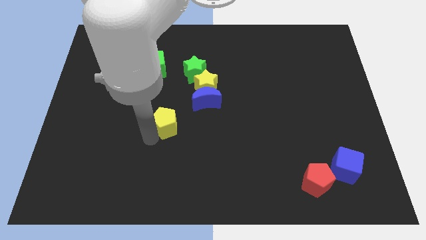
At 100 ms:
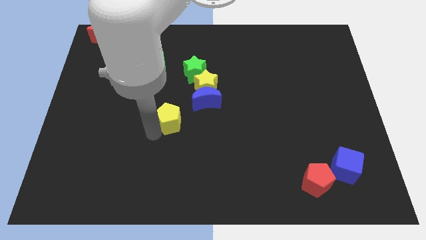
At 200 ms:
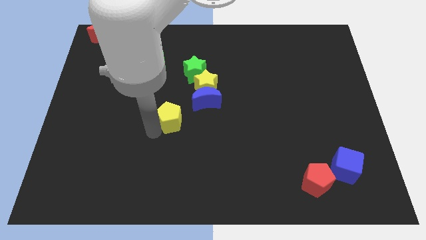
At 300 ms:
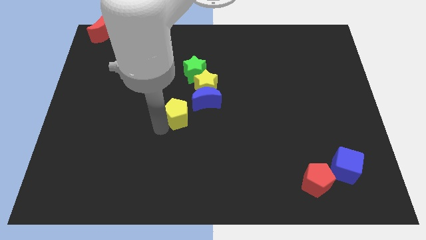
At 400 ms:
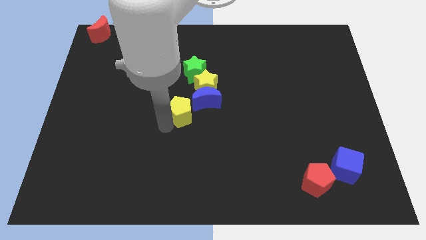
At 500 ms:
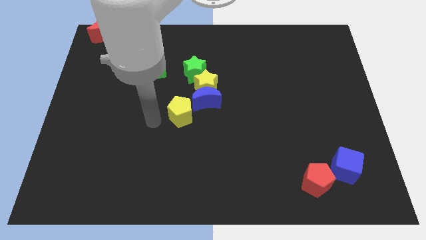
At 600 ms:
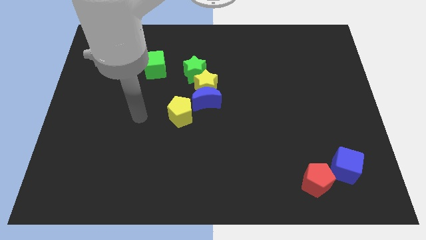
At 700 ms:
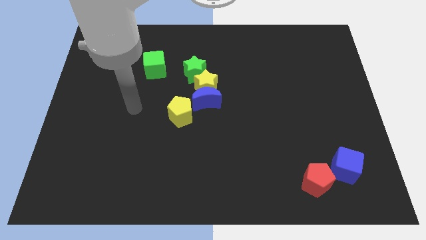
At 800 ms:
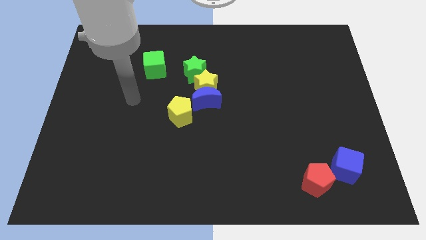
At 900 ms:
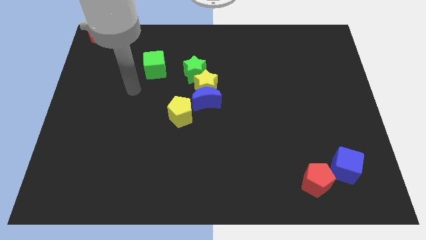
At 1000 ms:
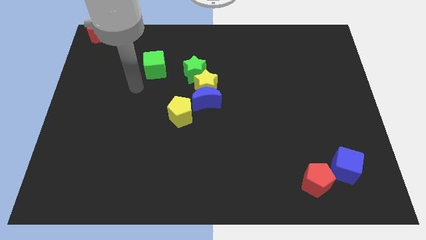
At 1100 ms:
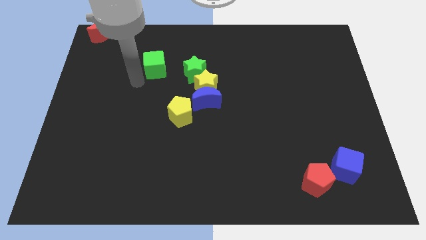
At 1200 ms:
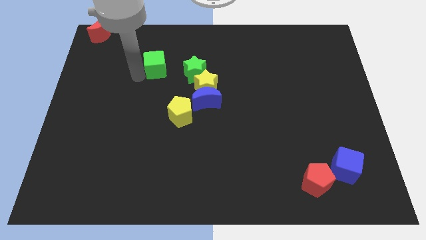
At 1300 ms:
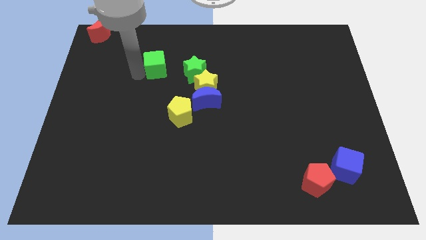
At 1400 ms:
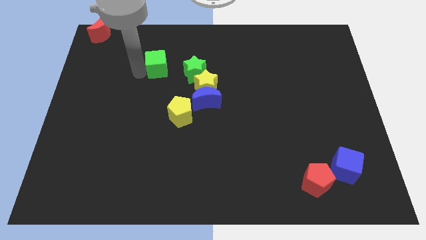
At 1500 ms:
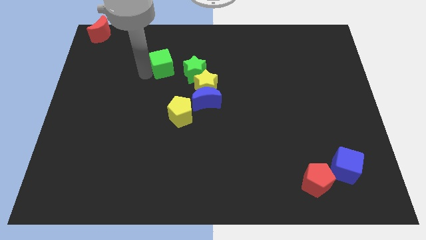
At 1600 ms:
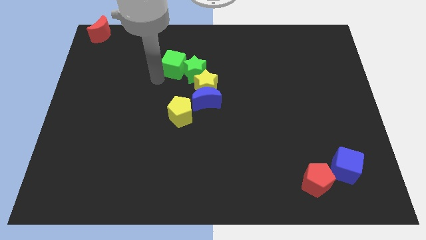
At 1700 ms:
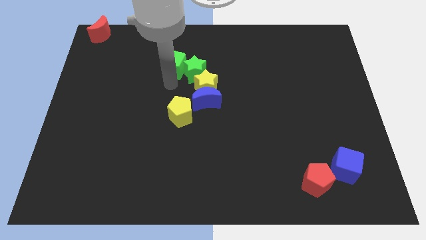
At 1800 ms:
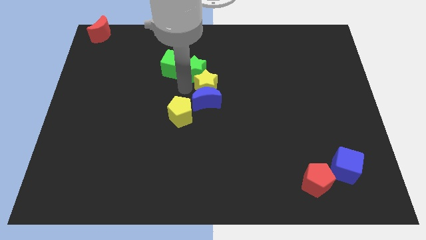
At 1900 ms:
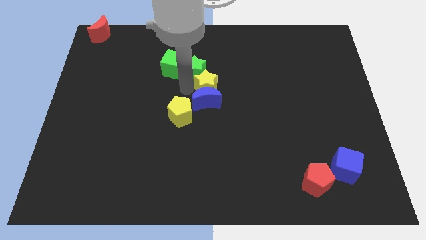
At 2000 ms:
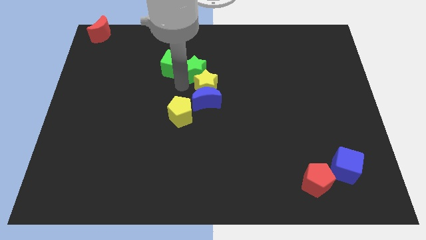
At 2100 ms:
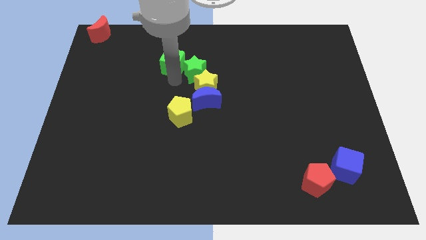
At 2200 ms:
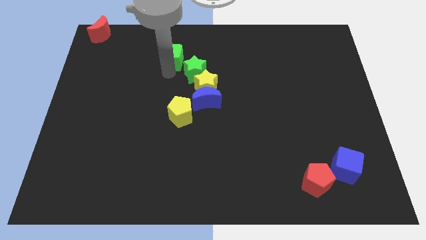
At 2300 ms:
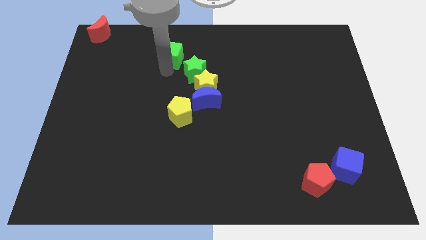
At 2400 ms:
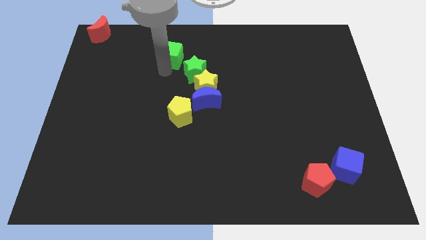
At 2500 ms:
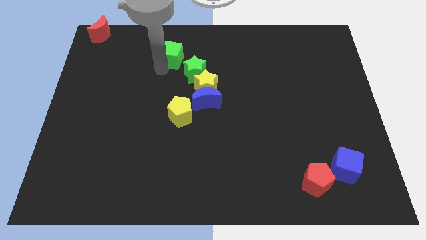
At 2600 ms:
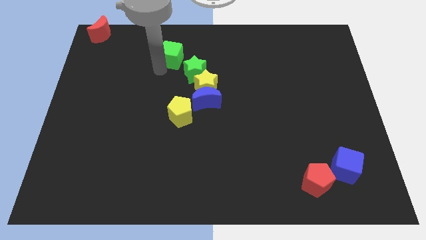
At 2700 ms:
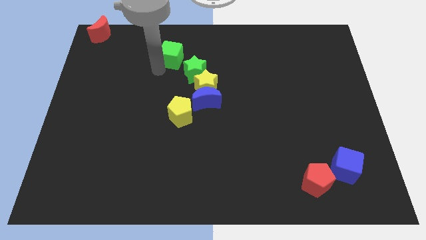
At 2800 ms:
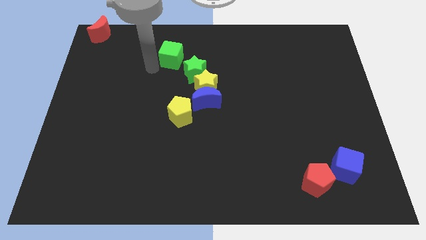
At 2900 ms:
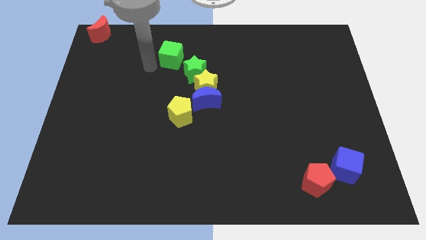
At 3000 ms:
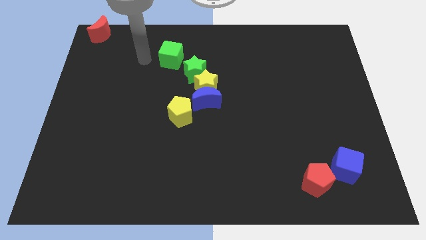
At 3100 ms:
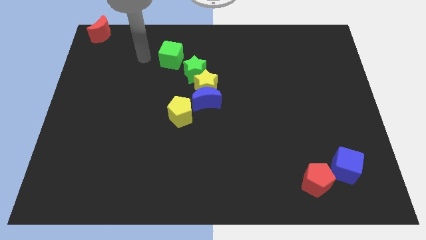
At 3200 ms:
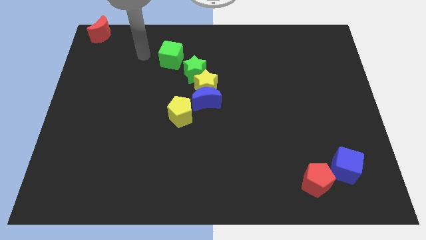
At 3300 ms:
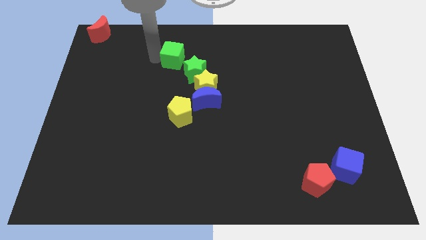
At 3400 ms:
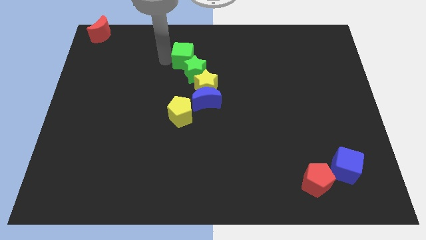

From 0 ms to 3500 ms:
move the green cube above the green star

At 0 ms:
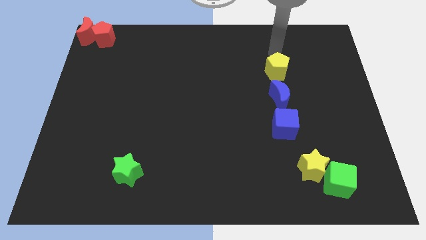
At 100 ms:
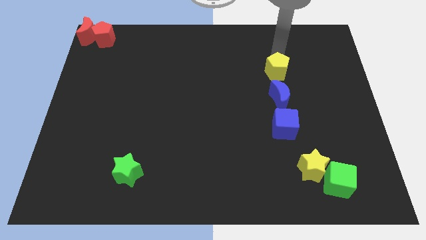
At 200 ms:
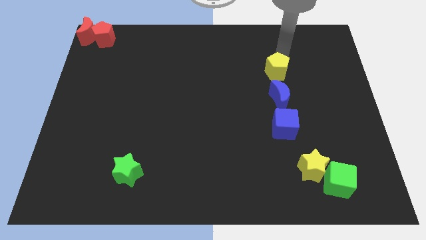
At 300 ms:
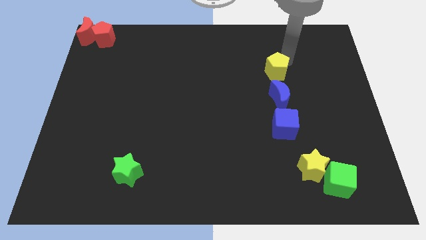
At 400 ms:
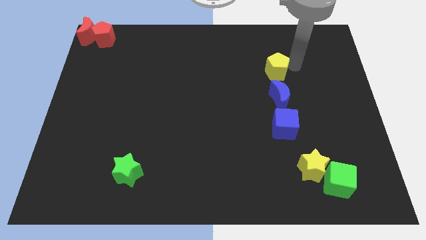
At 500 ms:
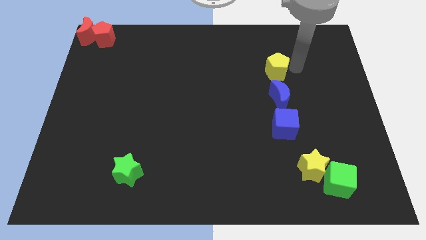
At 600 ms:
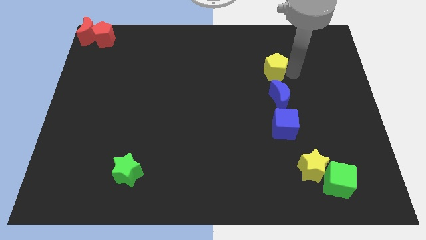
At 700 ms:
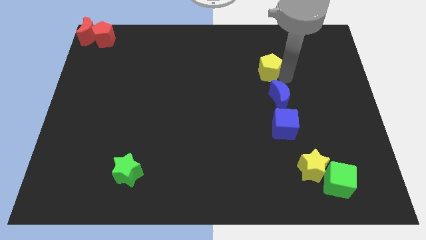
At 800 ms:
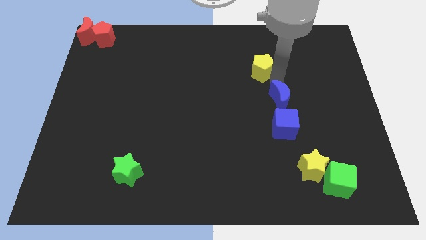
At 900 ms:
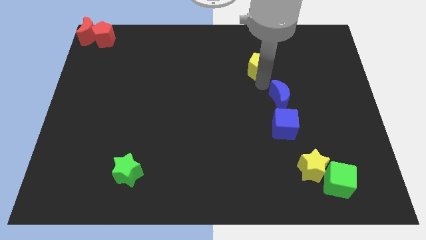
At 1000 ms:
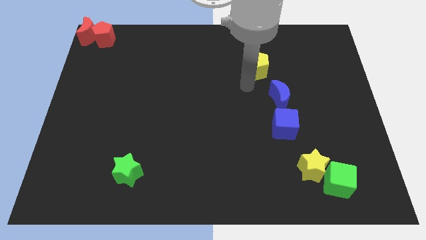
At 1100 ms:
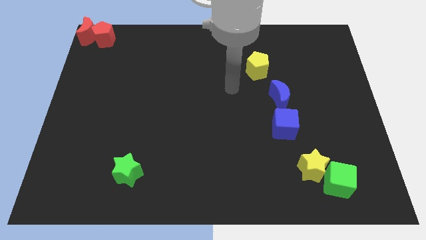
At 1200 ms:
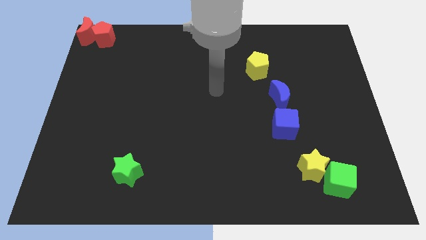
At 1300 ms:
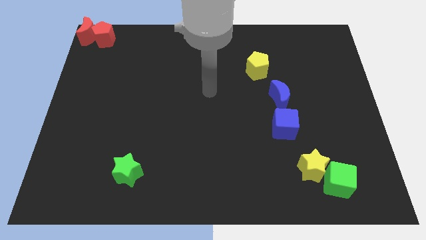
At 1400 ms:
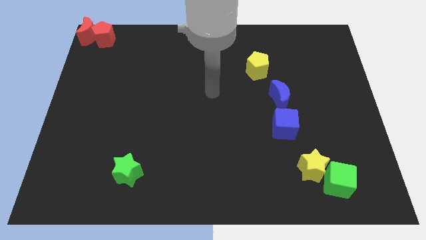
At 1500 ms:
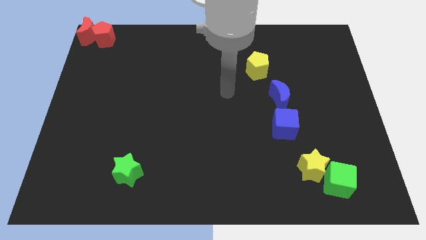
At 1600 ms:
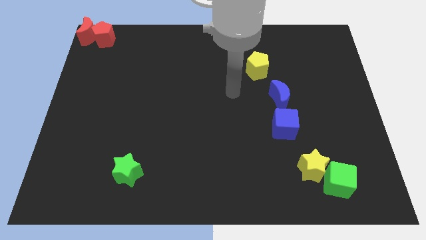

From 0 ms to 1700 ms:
push the yellow pentagon slightly to the left

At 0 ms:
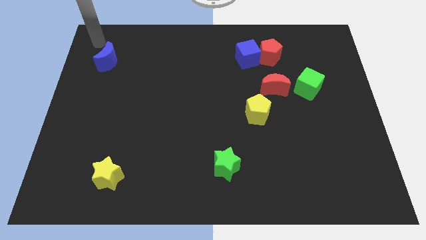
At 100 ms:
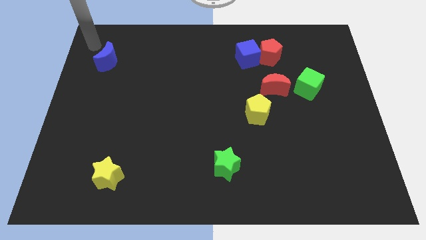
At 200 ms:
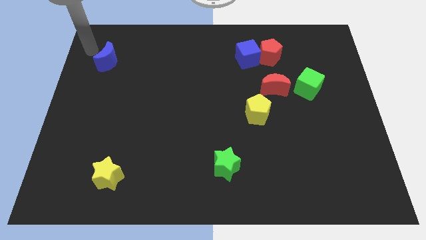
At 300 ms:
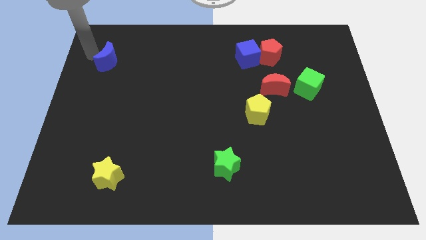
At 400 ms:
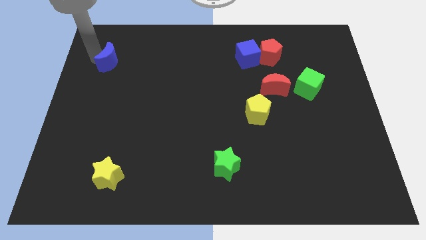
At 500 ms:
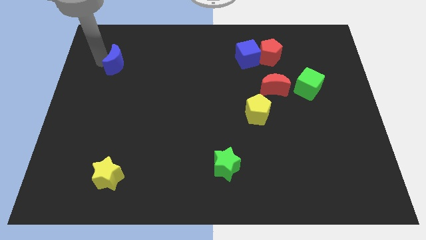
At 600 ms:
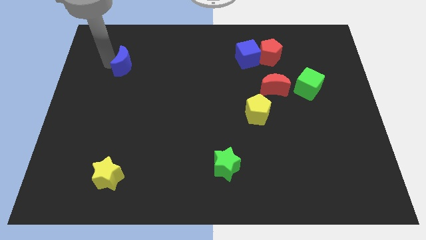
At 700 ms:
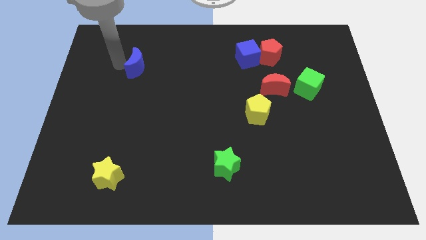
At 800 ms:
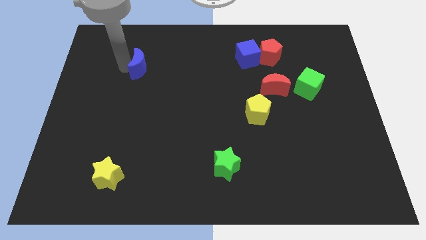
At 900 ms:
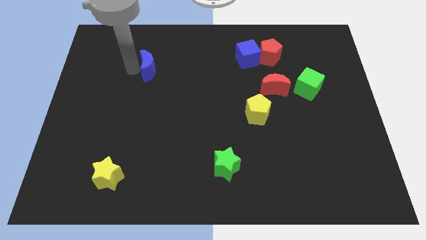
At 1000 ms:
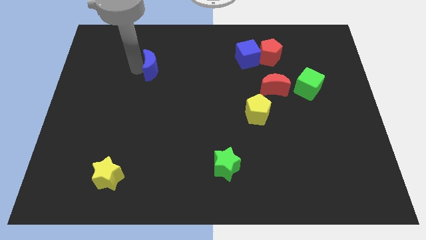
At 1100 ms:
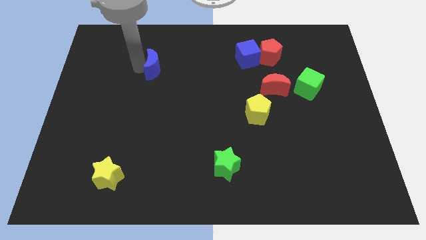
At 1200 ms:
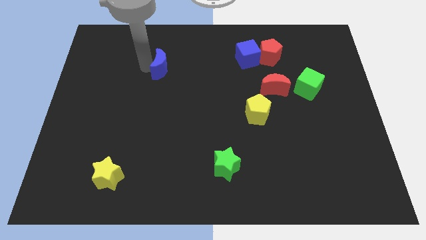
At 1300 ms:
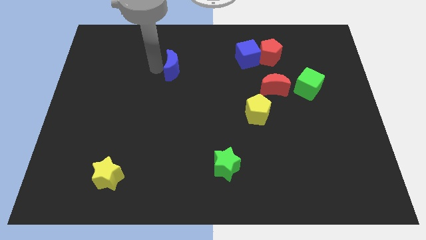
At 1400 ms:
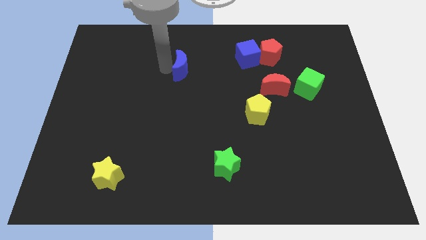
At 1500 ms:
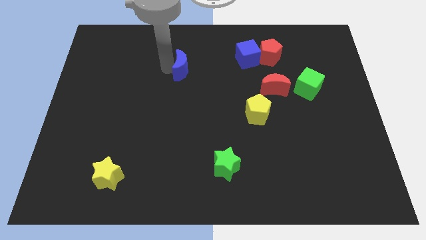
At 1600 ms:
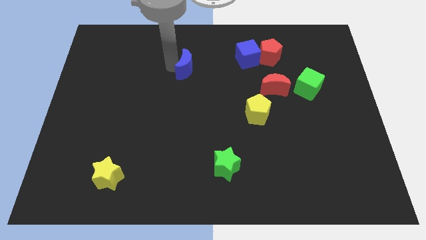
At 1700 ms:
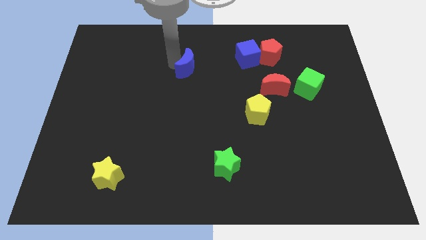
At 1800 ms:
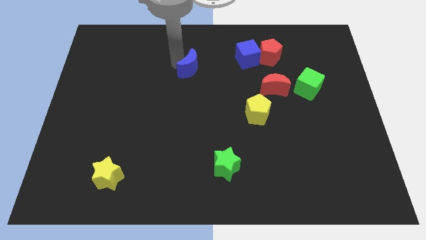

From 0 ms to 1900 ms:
move the blue crescent right to the board

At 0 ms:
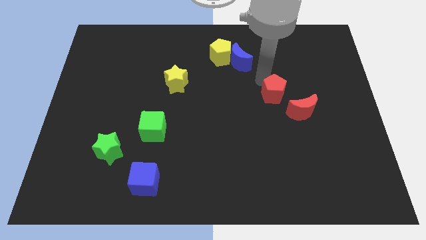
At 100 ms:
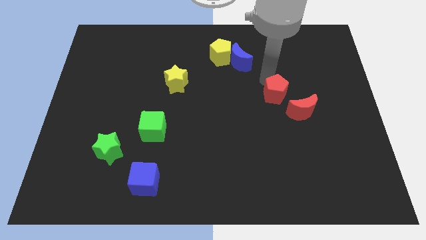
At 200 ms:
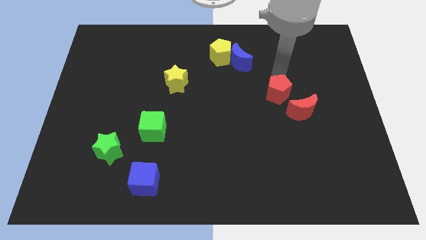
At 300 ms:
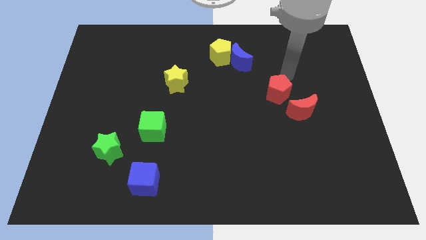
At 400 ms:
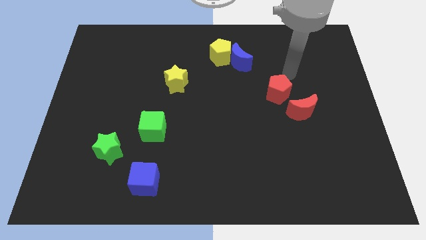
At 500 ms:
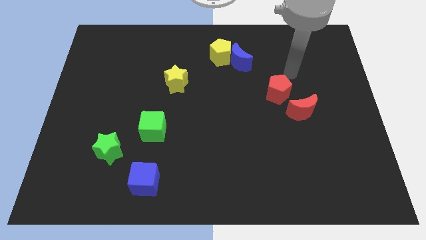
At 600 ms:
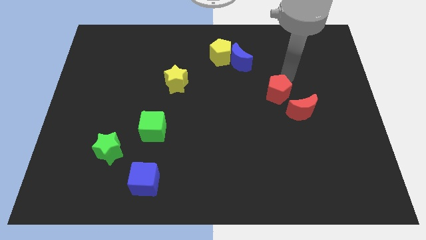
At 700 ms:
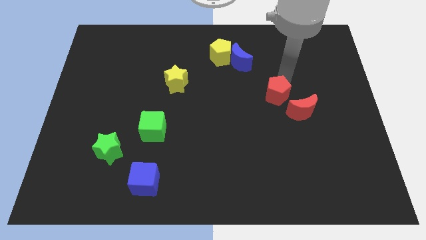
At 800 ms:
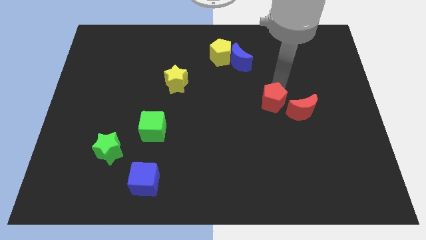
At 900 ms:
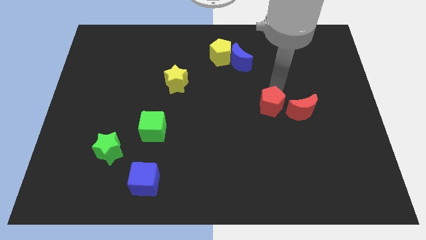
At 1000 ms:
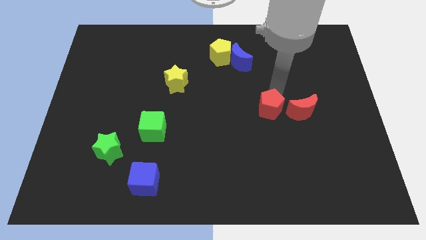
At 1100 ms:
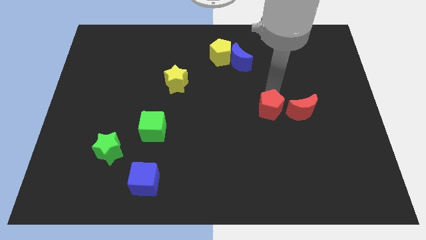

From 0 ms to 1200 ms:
move red pentagon to the left of red crescent

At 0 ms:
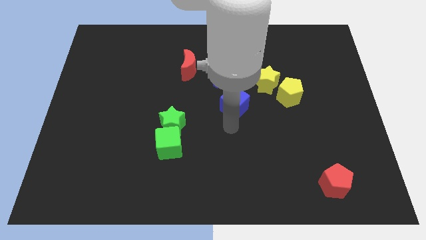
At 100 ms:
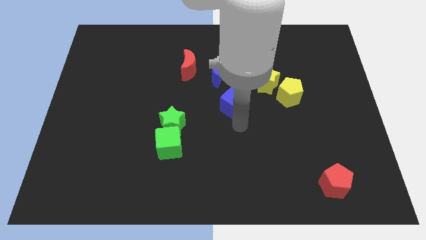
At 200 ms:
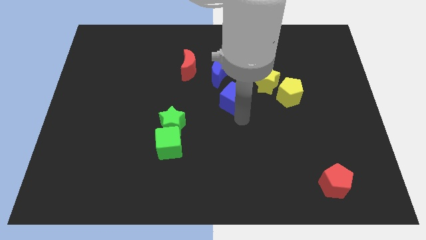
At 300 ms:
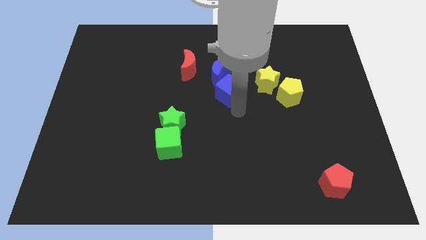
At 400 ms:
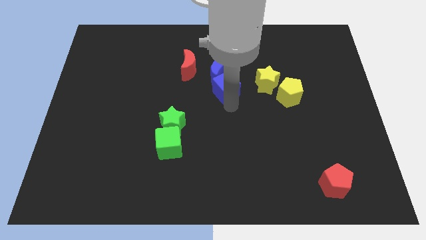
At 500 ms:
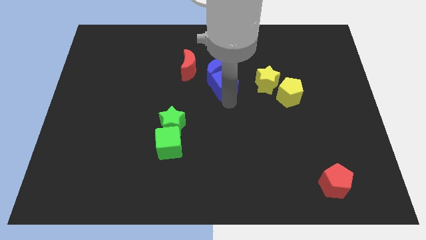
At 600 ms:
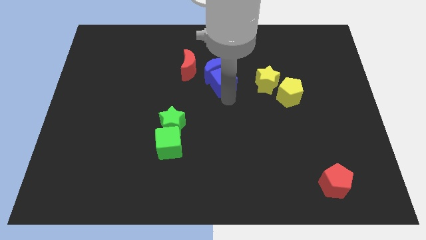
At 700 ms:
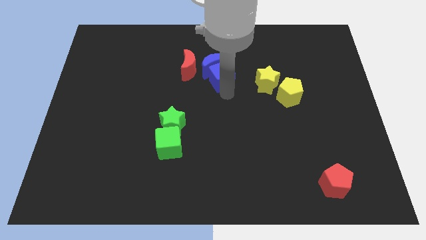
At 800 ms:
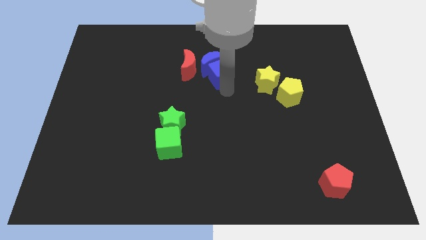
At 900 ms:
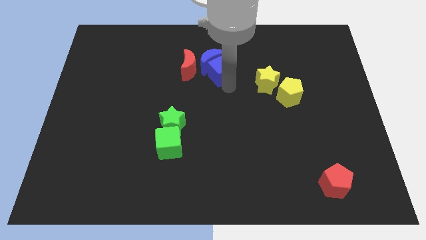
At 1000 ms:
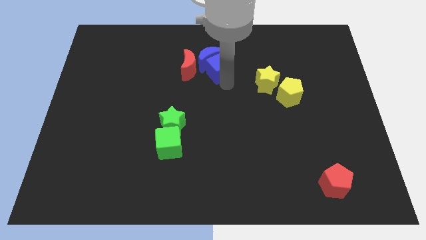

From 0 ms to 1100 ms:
place the blue cube below the blue crescent
